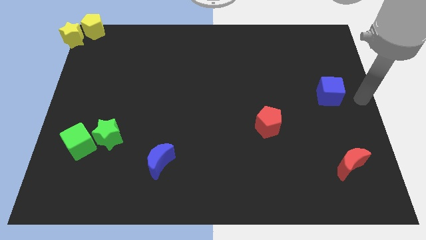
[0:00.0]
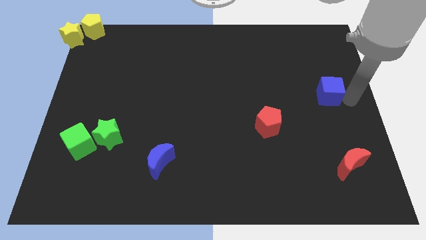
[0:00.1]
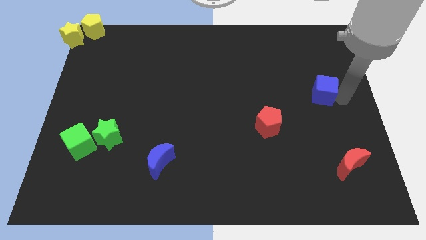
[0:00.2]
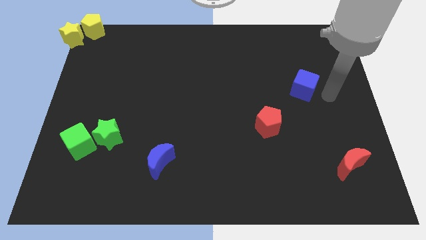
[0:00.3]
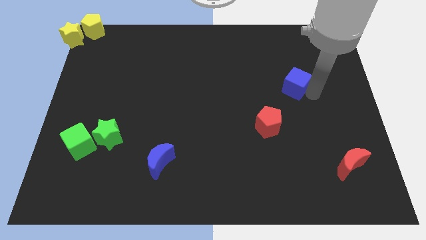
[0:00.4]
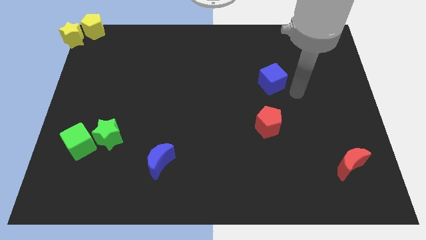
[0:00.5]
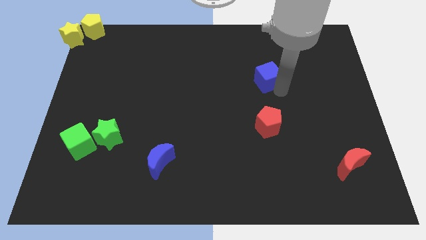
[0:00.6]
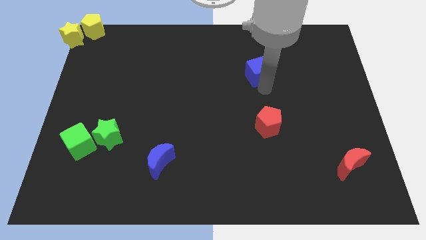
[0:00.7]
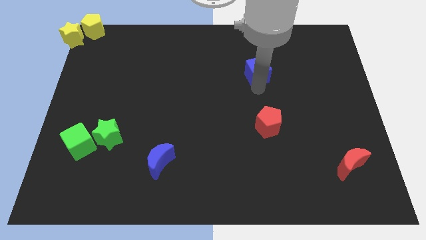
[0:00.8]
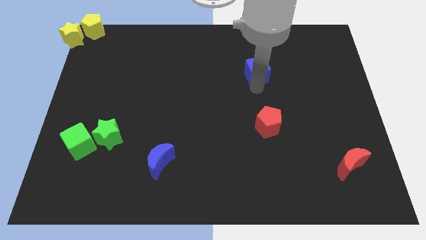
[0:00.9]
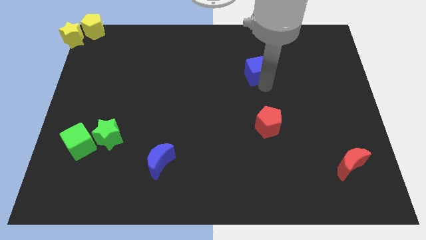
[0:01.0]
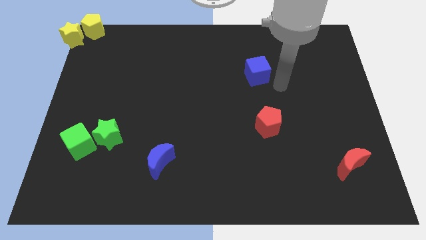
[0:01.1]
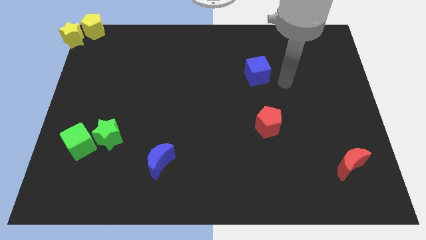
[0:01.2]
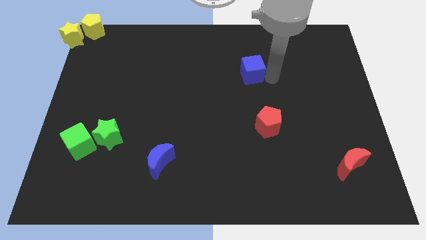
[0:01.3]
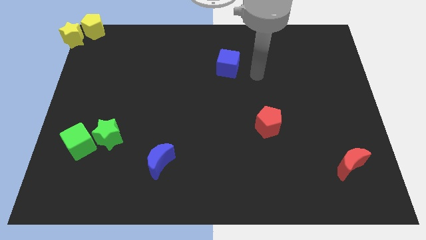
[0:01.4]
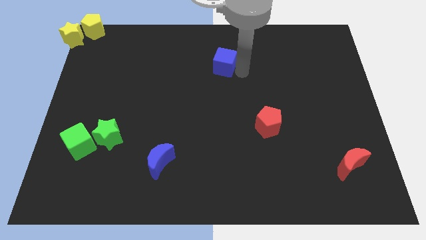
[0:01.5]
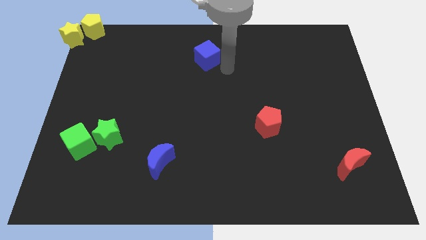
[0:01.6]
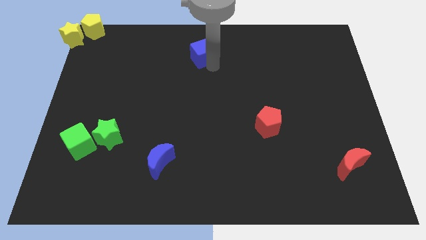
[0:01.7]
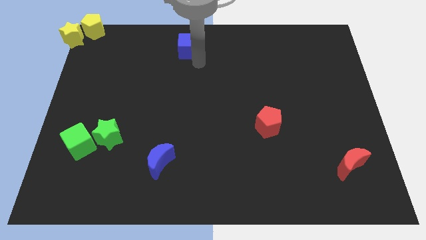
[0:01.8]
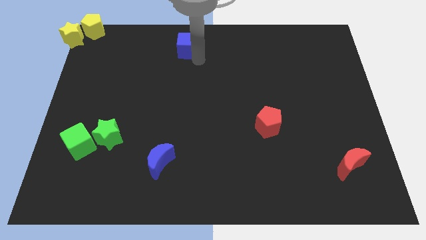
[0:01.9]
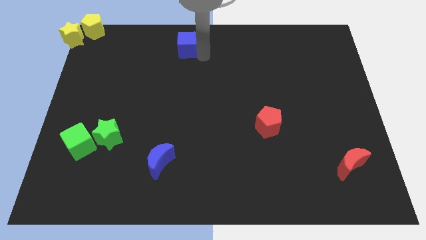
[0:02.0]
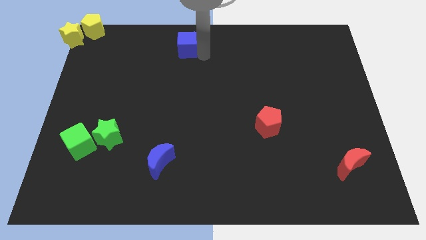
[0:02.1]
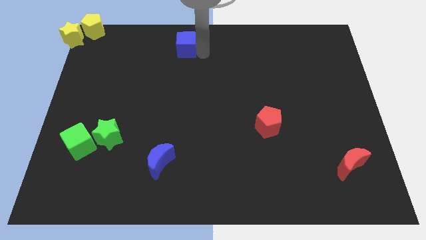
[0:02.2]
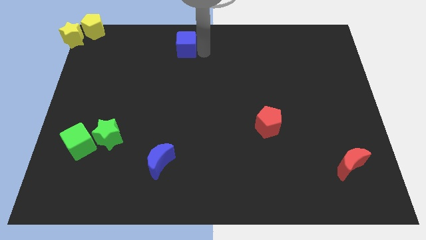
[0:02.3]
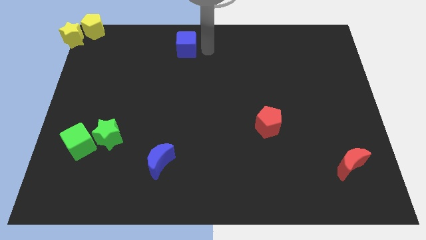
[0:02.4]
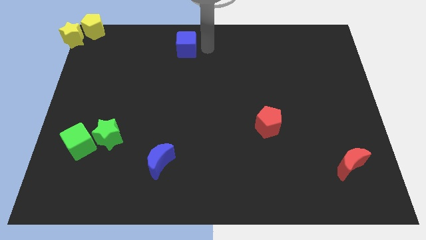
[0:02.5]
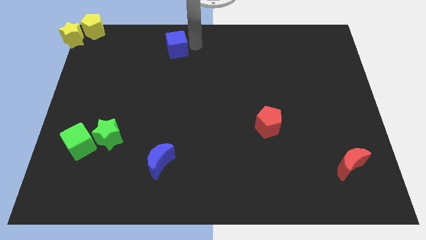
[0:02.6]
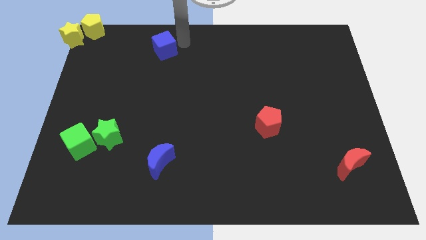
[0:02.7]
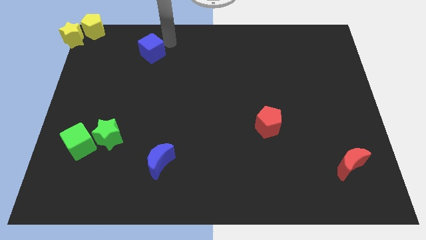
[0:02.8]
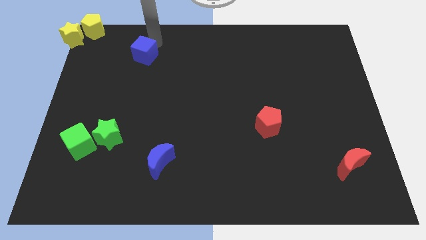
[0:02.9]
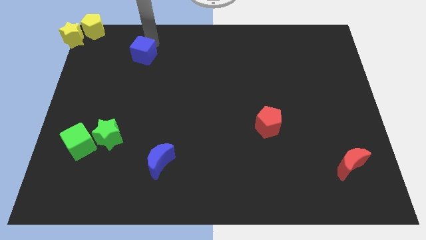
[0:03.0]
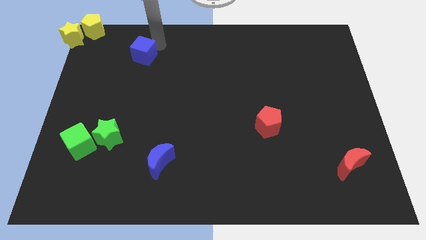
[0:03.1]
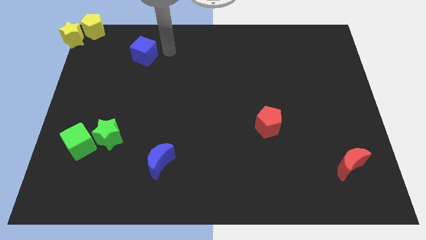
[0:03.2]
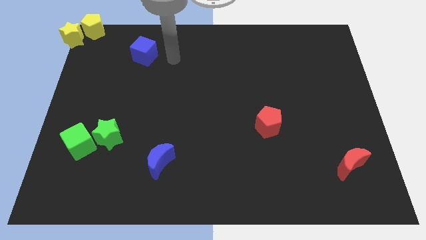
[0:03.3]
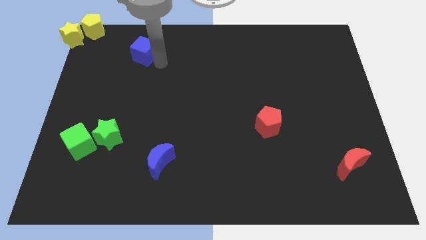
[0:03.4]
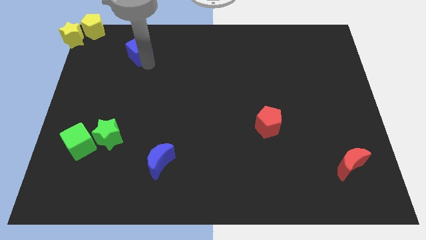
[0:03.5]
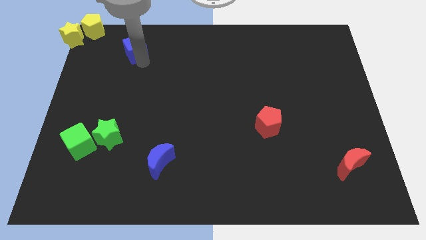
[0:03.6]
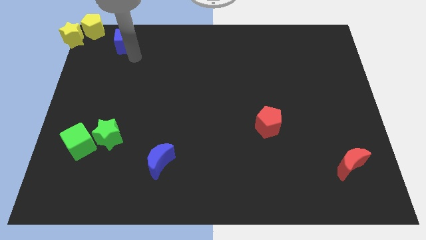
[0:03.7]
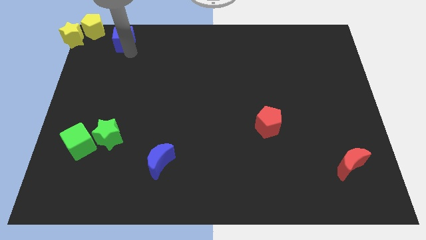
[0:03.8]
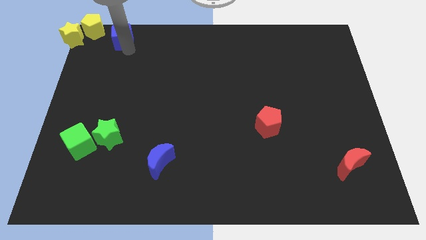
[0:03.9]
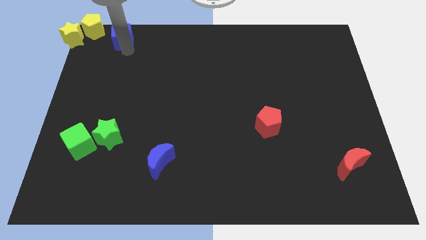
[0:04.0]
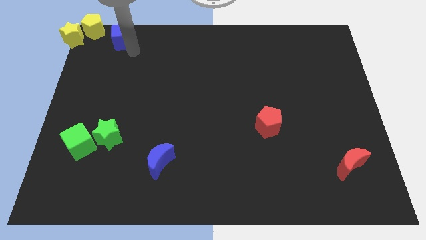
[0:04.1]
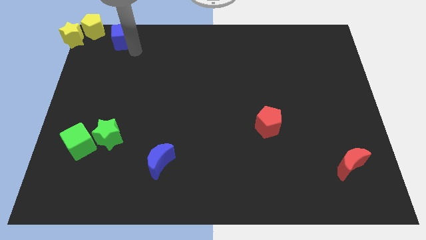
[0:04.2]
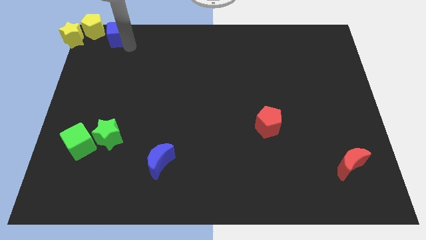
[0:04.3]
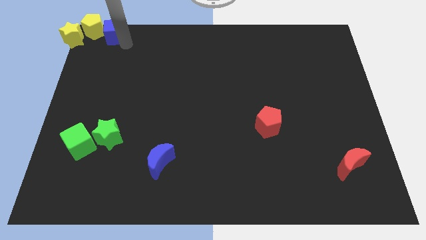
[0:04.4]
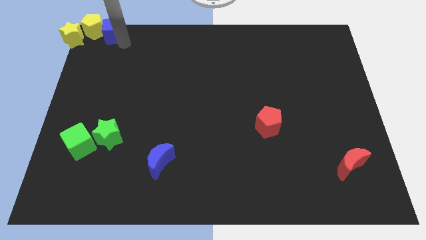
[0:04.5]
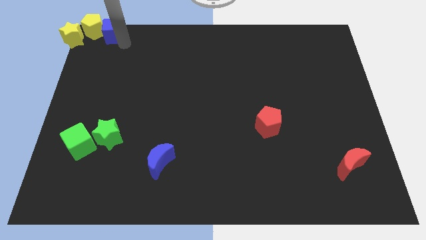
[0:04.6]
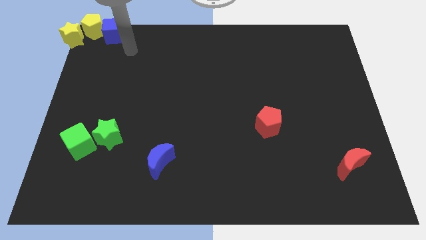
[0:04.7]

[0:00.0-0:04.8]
move the blue cube right of the yellow pentagon

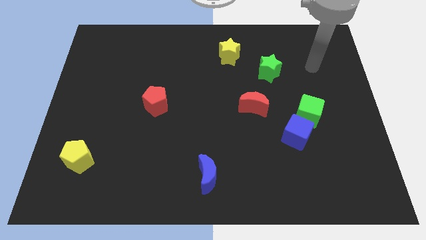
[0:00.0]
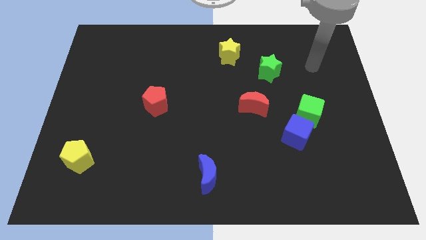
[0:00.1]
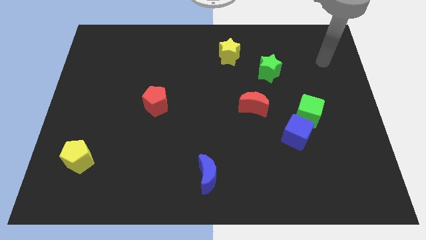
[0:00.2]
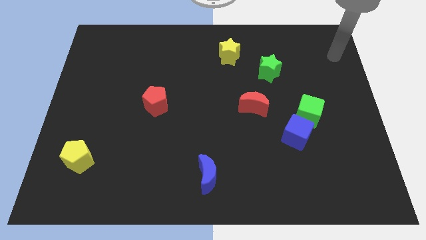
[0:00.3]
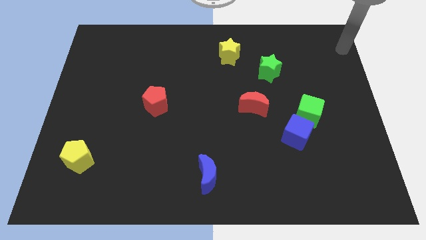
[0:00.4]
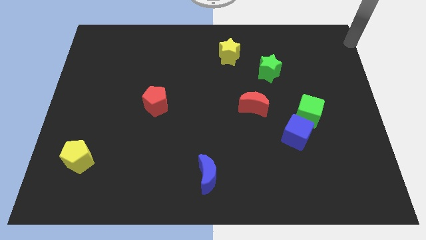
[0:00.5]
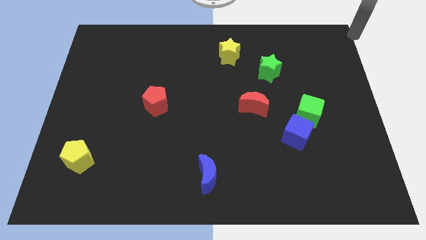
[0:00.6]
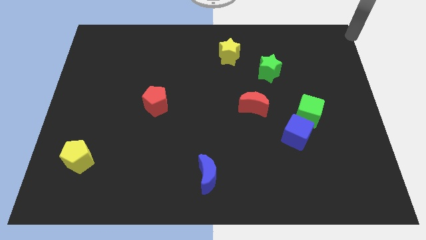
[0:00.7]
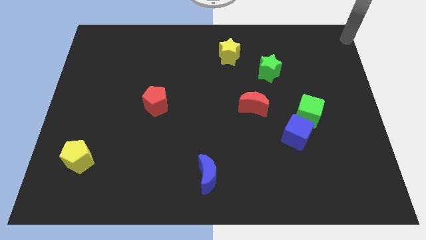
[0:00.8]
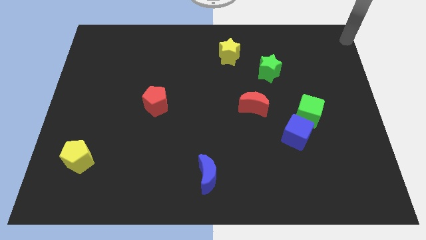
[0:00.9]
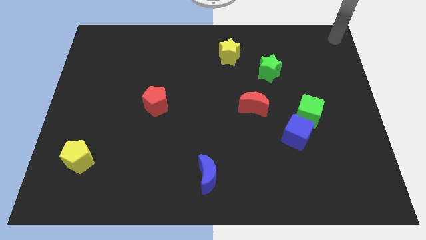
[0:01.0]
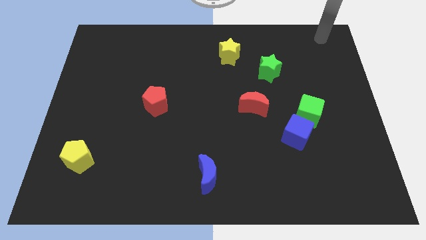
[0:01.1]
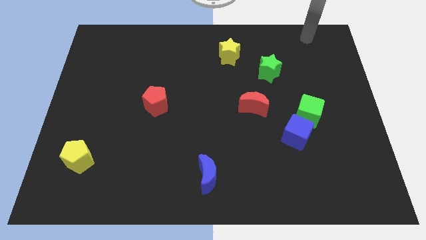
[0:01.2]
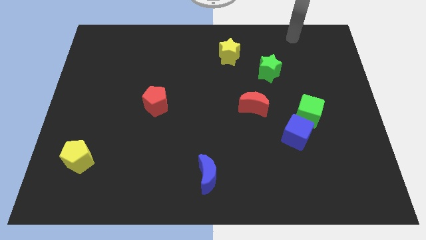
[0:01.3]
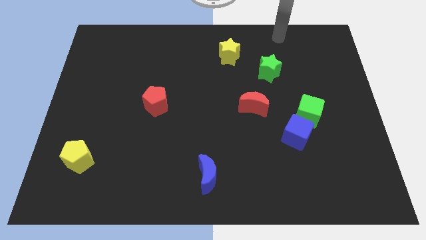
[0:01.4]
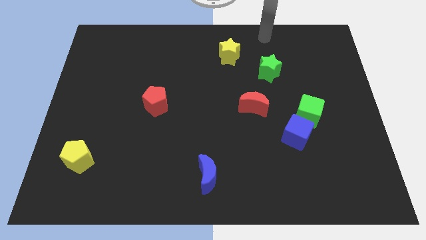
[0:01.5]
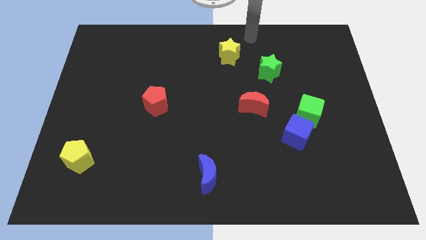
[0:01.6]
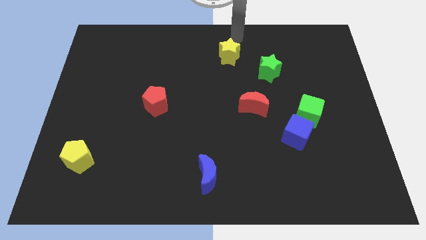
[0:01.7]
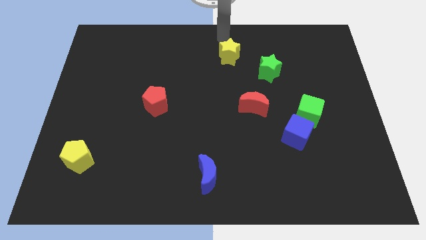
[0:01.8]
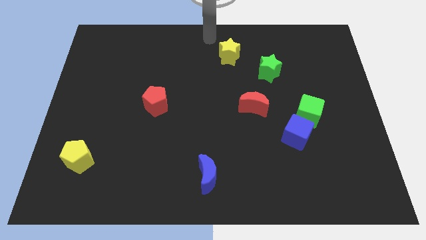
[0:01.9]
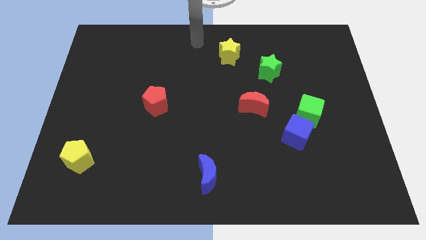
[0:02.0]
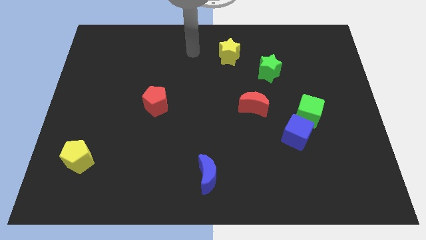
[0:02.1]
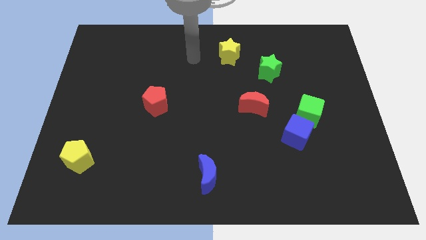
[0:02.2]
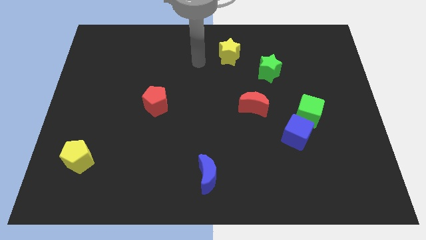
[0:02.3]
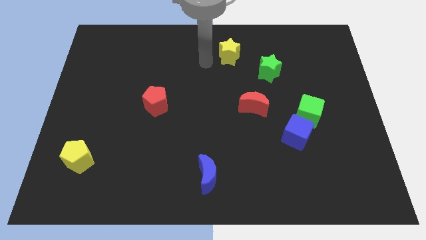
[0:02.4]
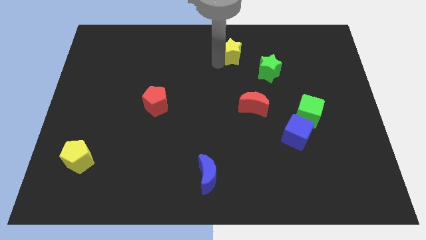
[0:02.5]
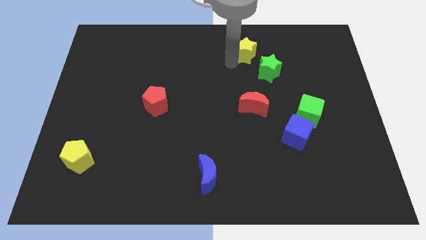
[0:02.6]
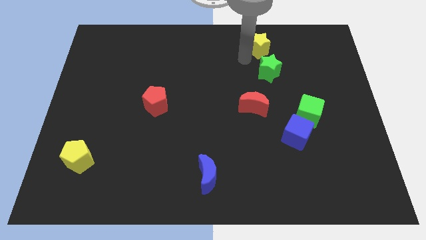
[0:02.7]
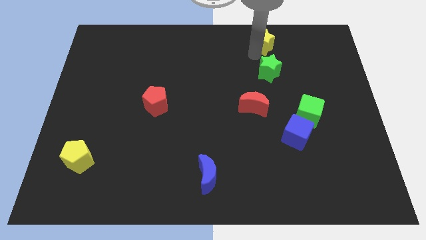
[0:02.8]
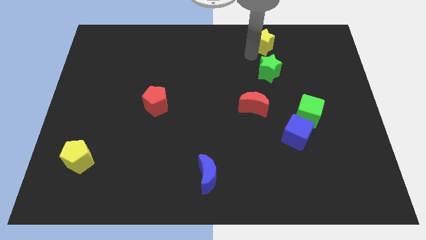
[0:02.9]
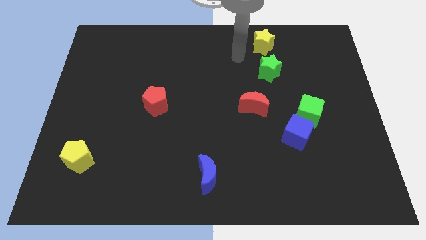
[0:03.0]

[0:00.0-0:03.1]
place yellow star to the top of the green star

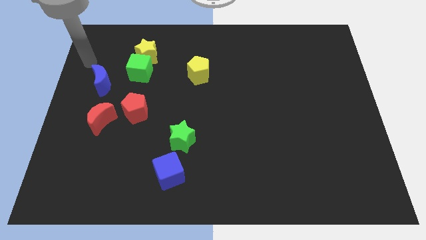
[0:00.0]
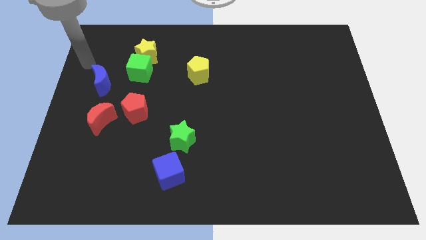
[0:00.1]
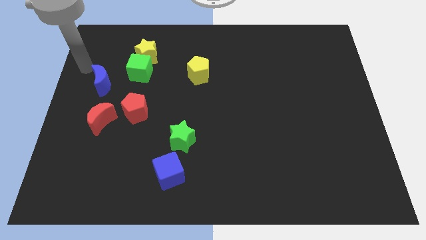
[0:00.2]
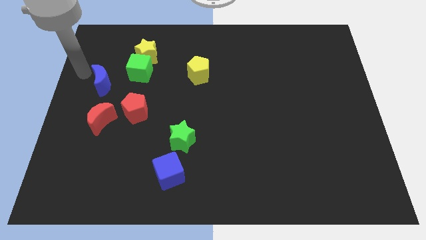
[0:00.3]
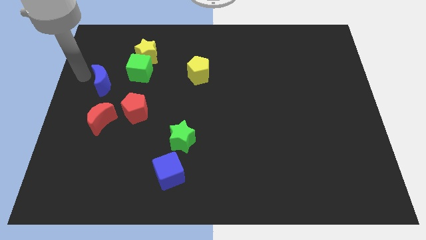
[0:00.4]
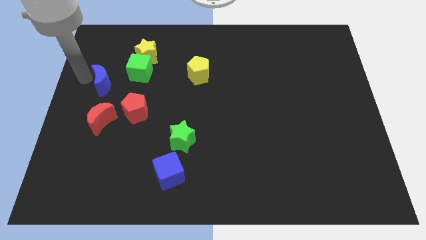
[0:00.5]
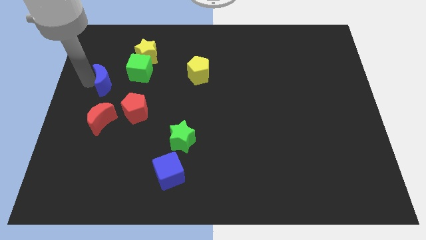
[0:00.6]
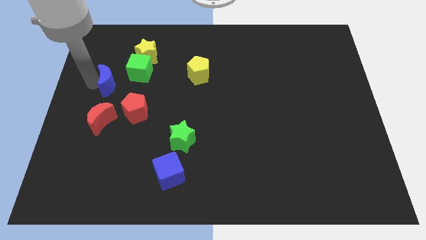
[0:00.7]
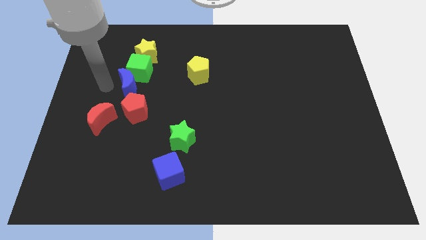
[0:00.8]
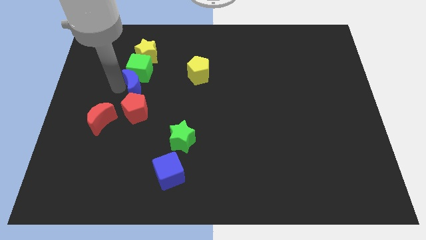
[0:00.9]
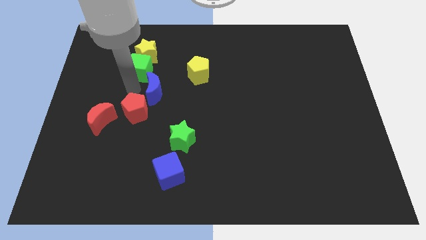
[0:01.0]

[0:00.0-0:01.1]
move the blue crescent to the top right of the red pentagon
